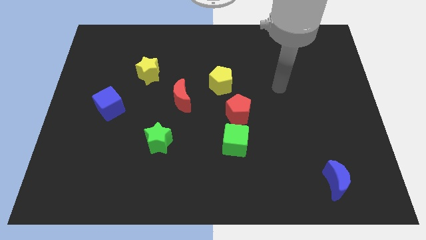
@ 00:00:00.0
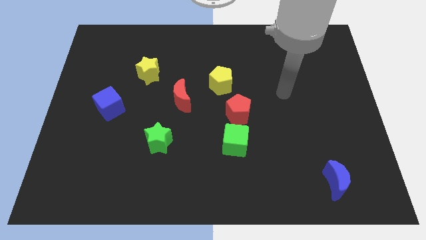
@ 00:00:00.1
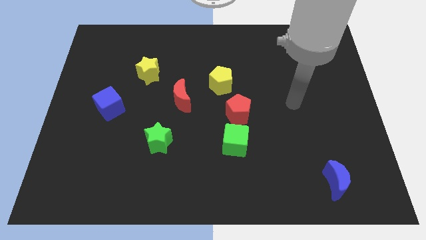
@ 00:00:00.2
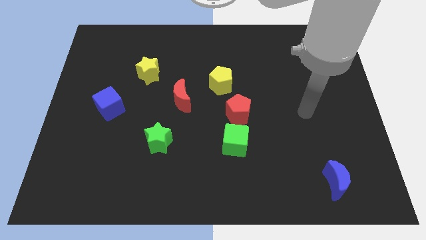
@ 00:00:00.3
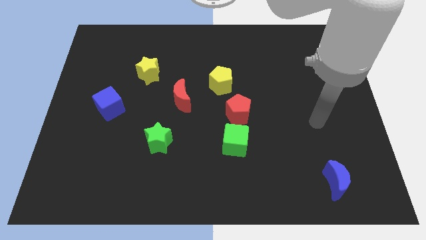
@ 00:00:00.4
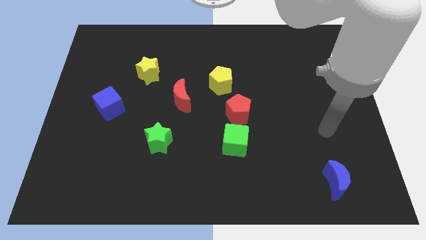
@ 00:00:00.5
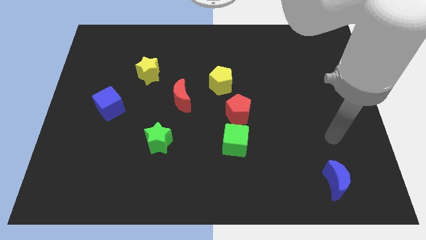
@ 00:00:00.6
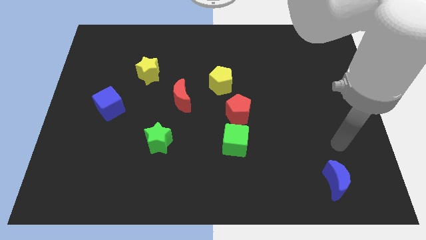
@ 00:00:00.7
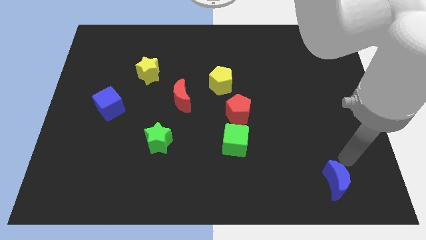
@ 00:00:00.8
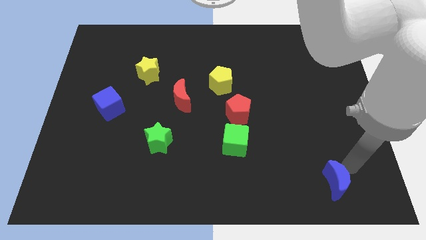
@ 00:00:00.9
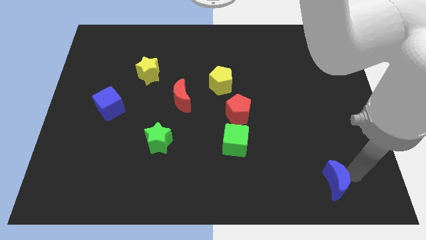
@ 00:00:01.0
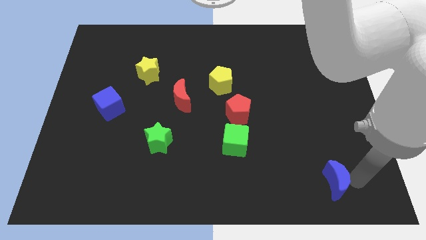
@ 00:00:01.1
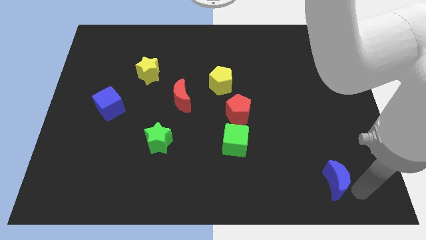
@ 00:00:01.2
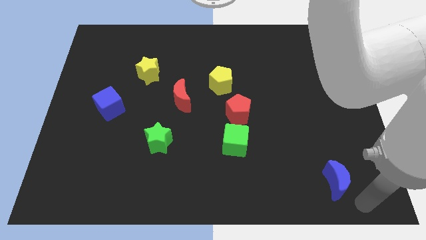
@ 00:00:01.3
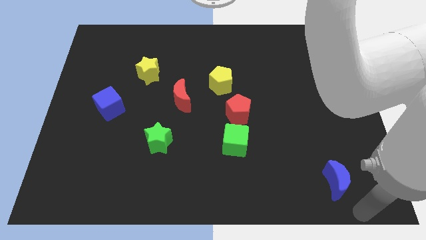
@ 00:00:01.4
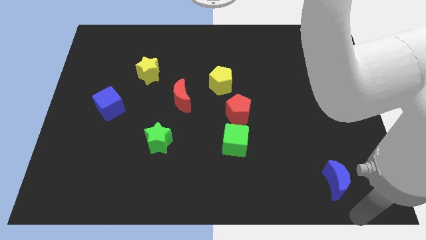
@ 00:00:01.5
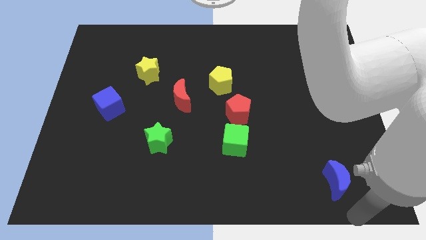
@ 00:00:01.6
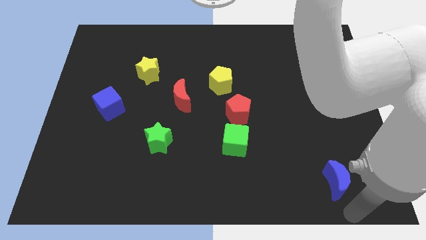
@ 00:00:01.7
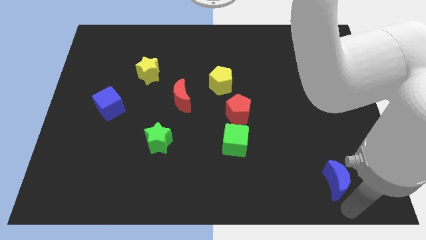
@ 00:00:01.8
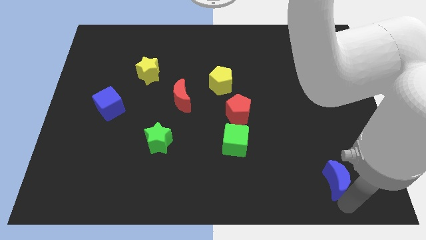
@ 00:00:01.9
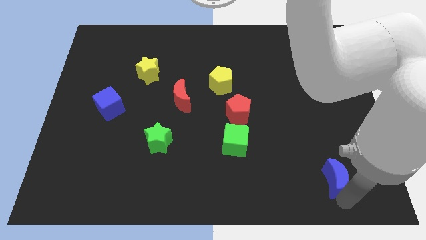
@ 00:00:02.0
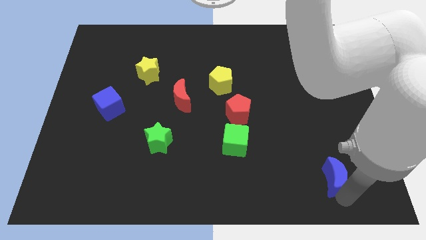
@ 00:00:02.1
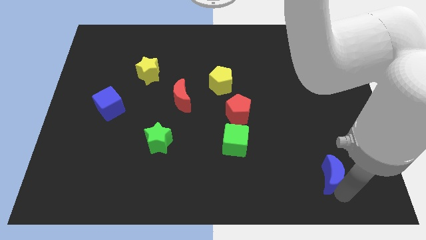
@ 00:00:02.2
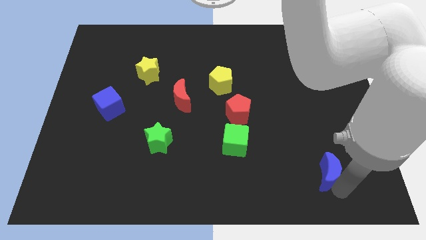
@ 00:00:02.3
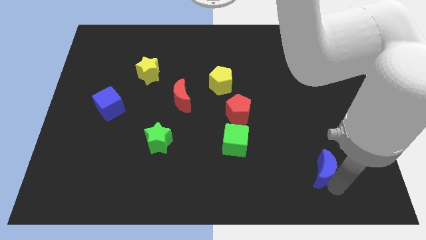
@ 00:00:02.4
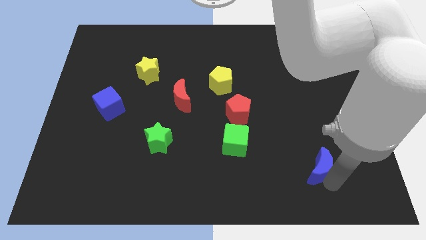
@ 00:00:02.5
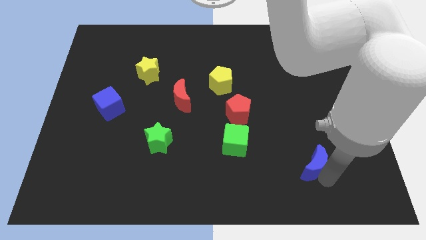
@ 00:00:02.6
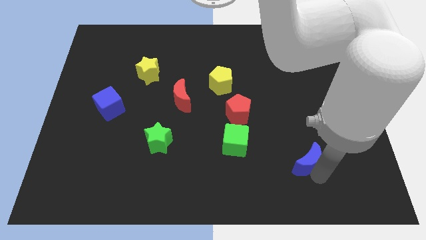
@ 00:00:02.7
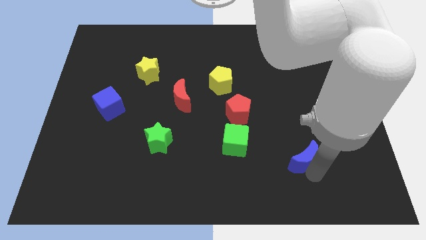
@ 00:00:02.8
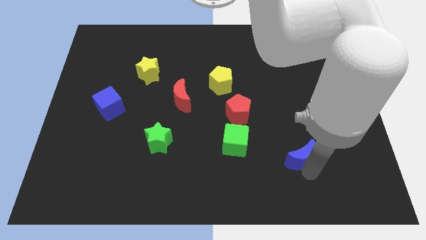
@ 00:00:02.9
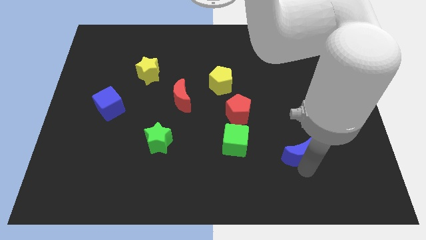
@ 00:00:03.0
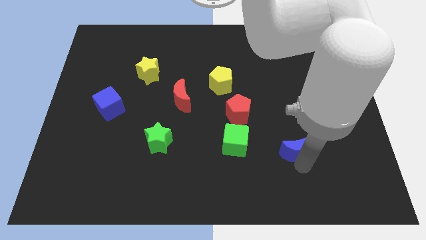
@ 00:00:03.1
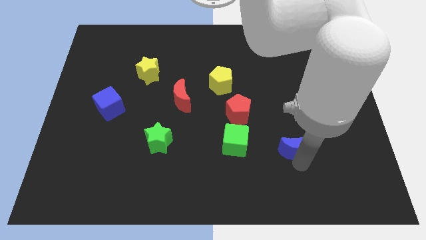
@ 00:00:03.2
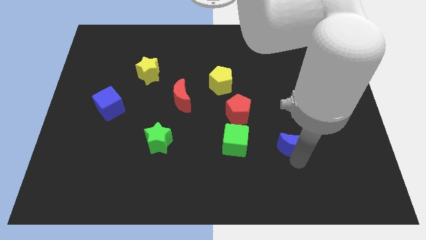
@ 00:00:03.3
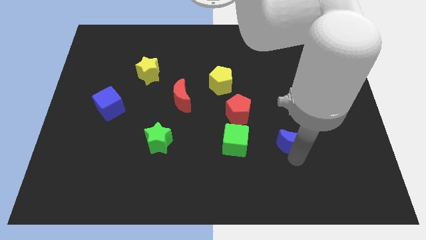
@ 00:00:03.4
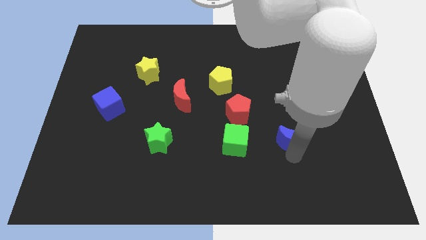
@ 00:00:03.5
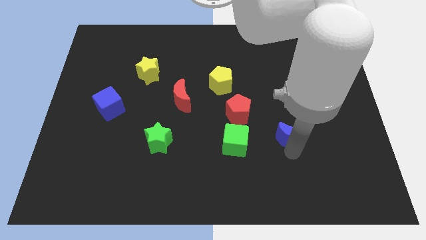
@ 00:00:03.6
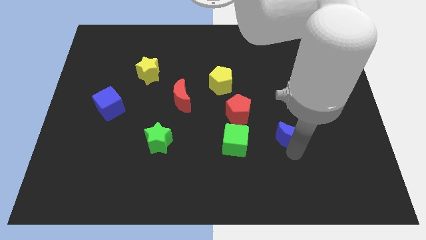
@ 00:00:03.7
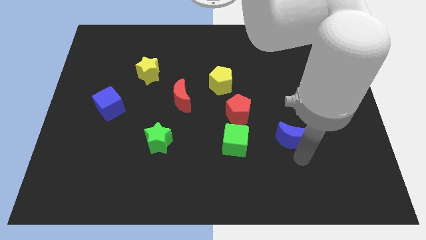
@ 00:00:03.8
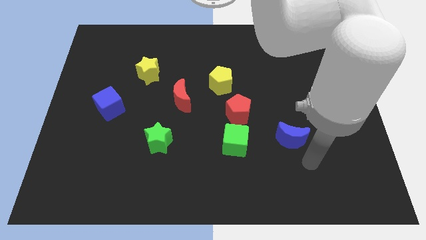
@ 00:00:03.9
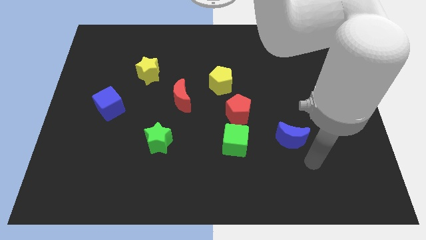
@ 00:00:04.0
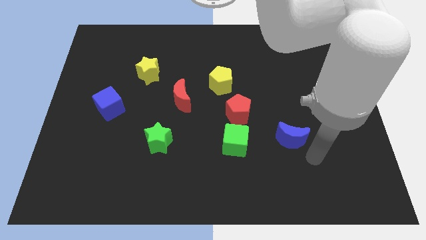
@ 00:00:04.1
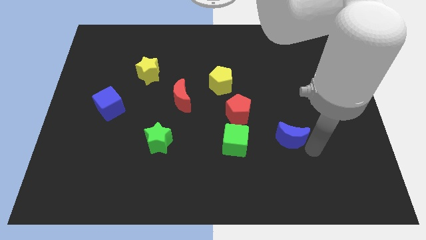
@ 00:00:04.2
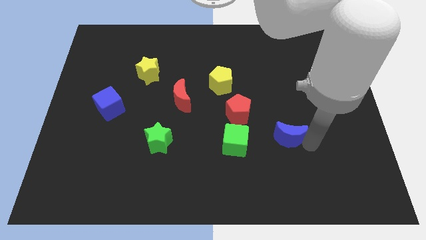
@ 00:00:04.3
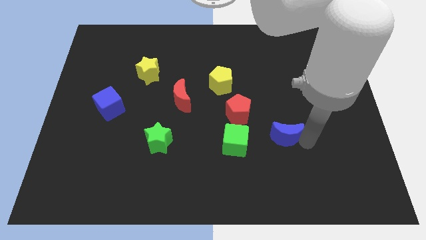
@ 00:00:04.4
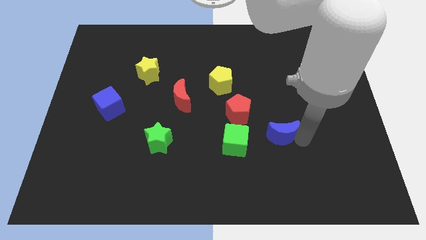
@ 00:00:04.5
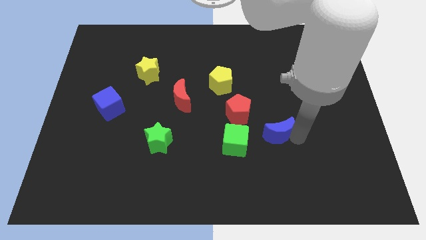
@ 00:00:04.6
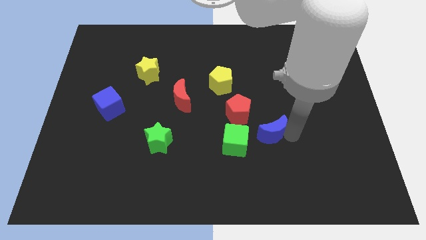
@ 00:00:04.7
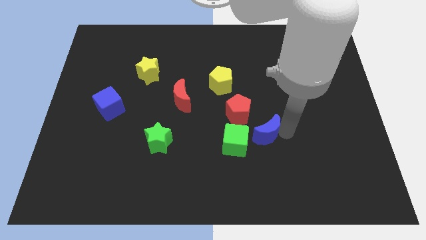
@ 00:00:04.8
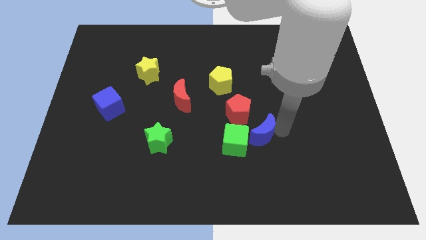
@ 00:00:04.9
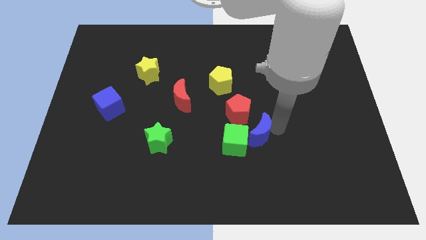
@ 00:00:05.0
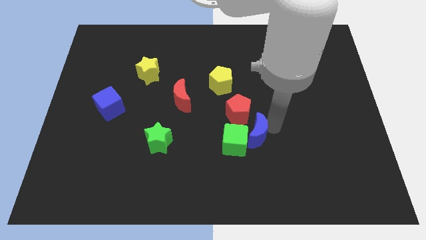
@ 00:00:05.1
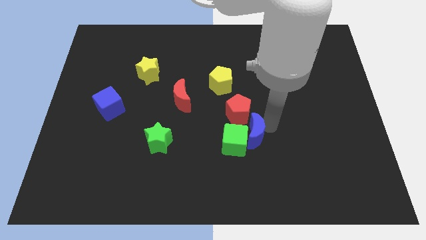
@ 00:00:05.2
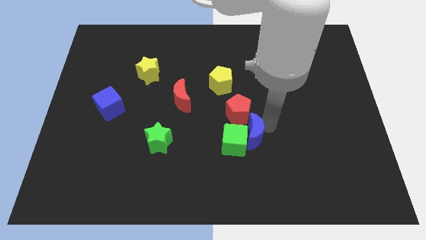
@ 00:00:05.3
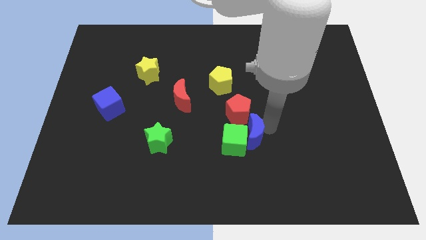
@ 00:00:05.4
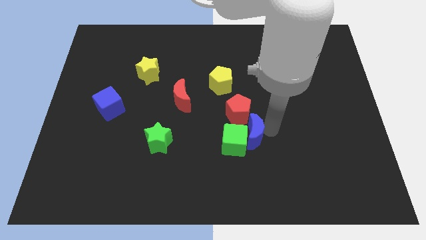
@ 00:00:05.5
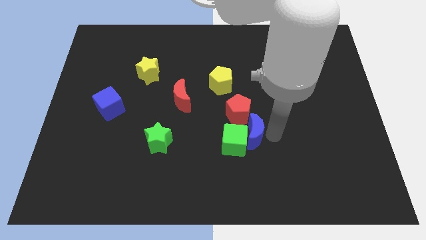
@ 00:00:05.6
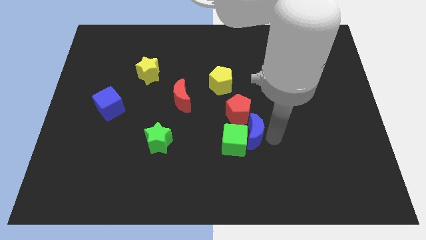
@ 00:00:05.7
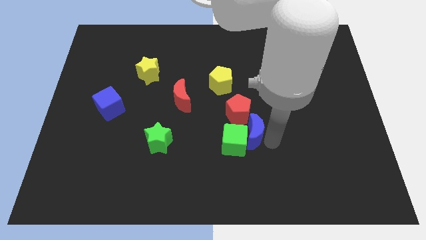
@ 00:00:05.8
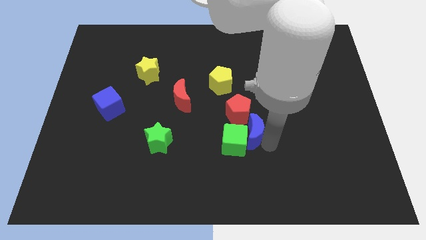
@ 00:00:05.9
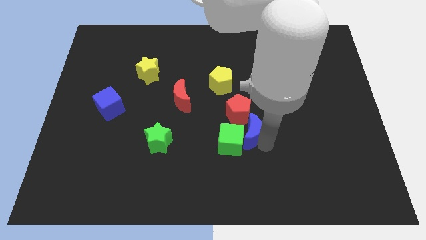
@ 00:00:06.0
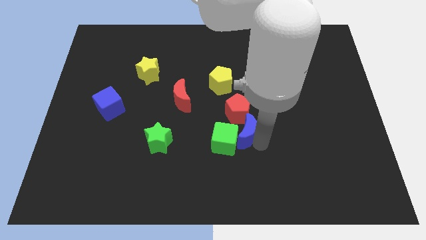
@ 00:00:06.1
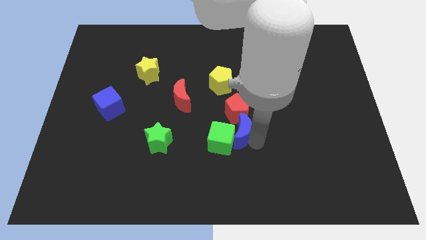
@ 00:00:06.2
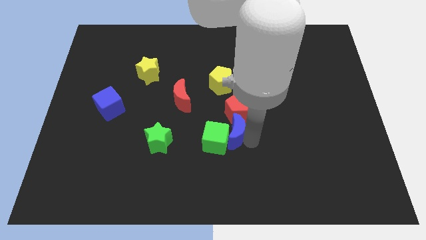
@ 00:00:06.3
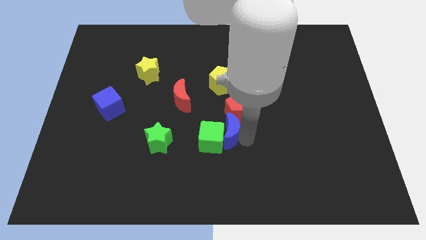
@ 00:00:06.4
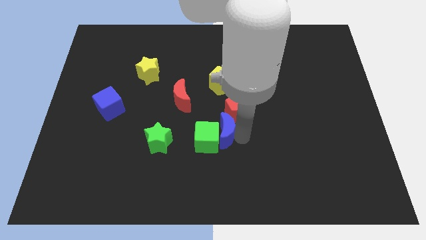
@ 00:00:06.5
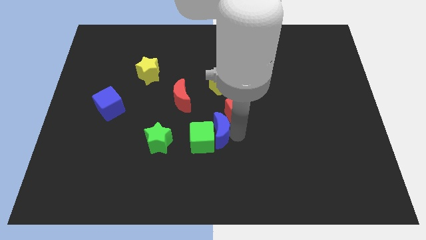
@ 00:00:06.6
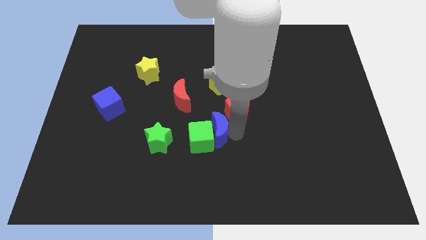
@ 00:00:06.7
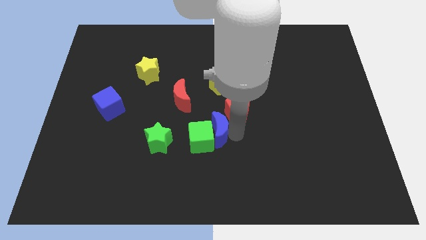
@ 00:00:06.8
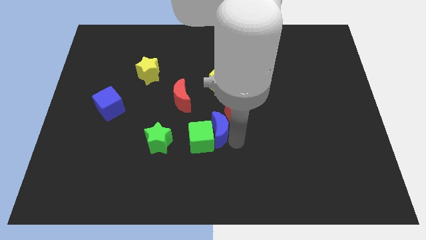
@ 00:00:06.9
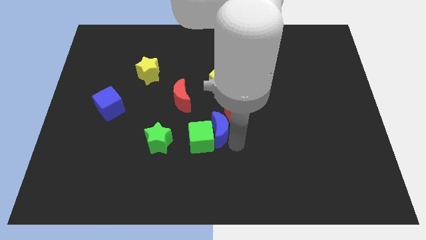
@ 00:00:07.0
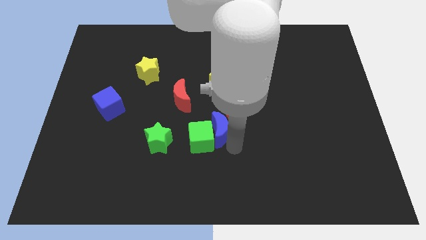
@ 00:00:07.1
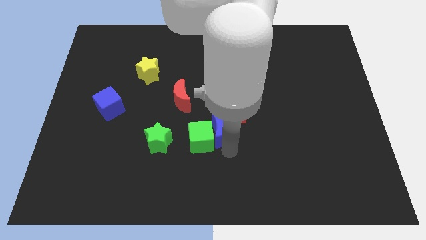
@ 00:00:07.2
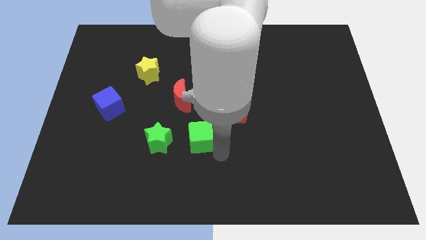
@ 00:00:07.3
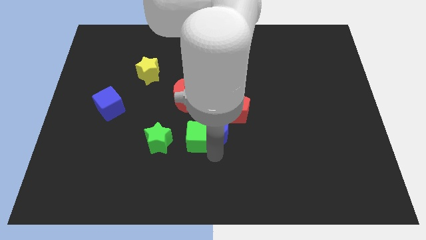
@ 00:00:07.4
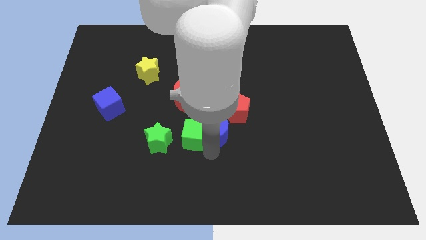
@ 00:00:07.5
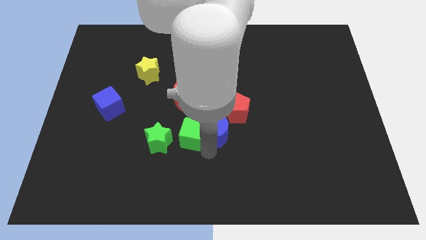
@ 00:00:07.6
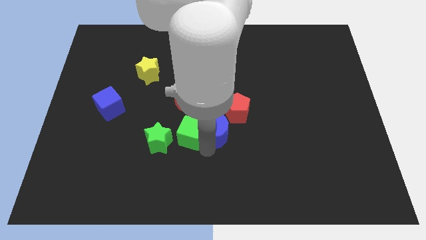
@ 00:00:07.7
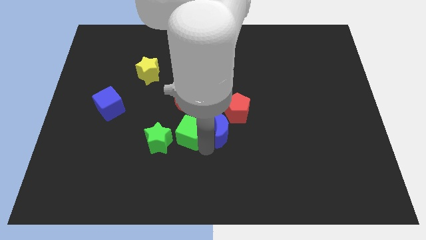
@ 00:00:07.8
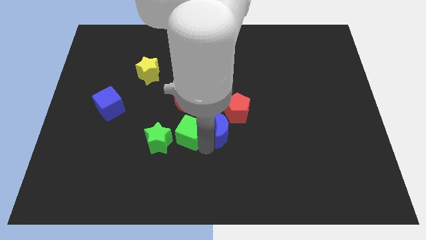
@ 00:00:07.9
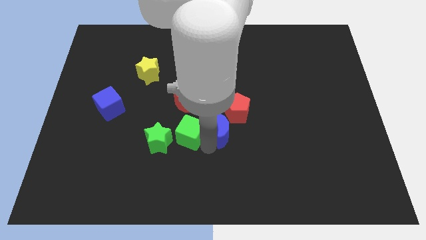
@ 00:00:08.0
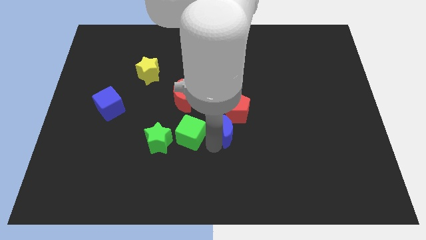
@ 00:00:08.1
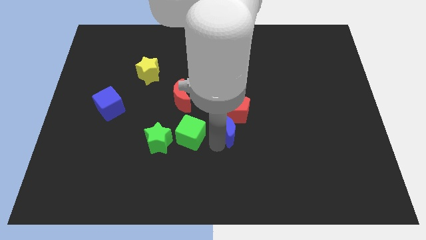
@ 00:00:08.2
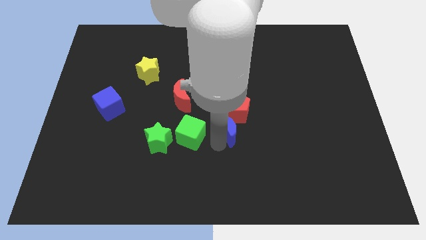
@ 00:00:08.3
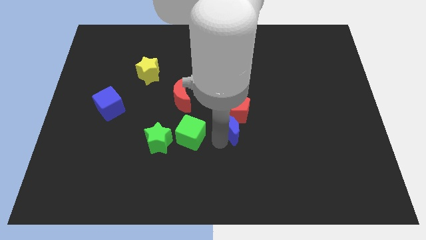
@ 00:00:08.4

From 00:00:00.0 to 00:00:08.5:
move the blue moon next to the red pentagon
